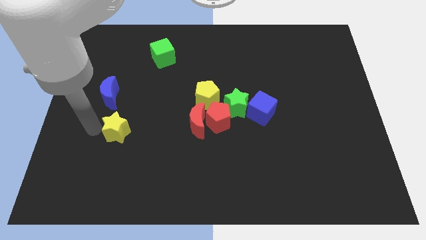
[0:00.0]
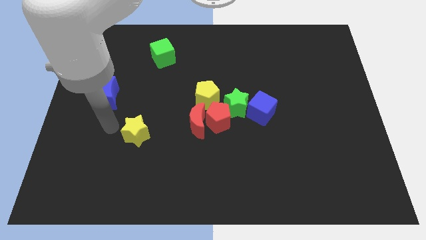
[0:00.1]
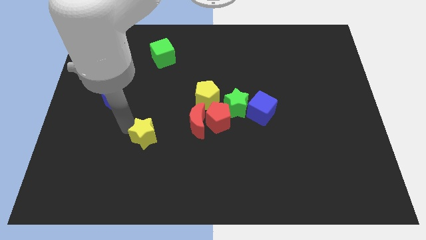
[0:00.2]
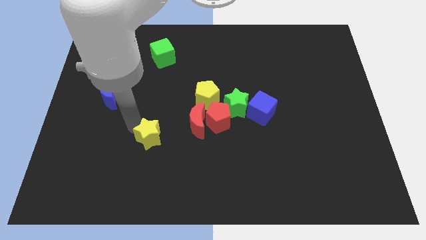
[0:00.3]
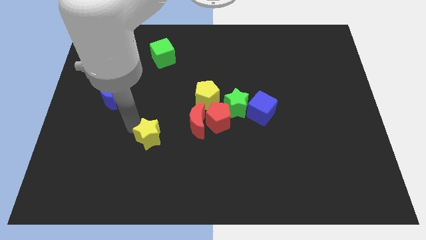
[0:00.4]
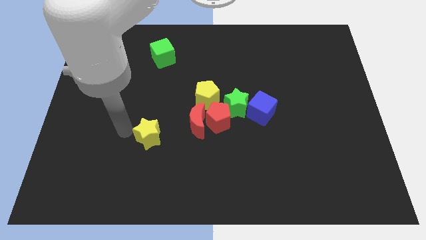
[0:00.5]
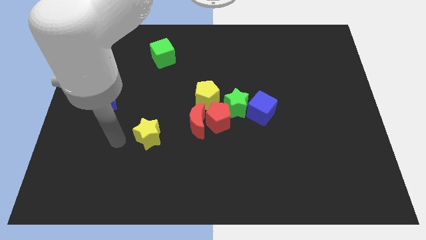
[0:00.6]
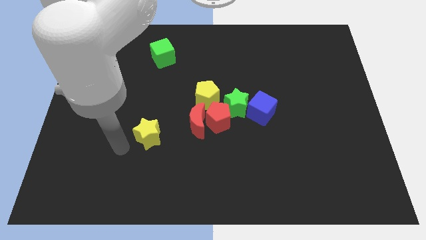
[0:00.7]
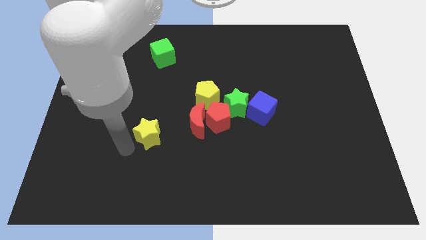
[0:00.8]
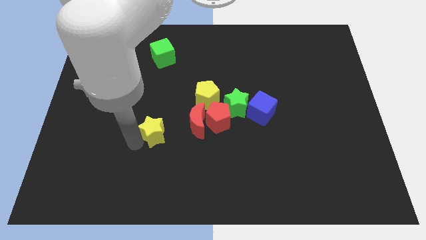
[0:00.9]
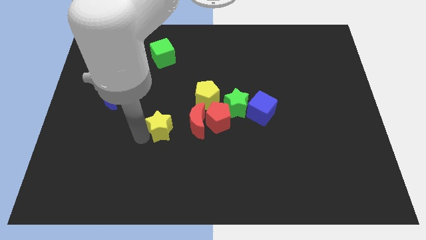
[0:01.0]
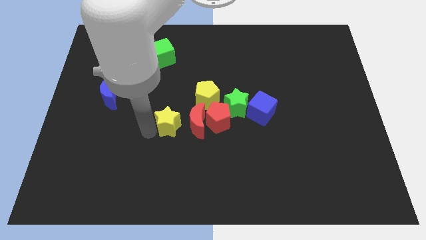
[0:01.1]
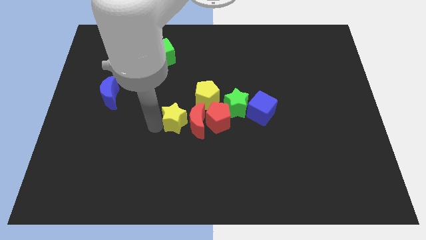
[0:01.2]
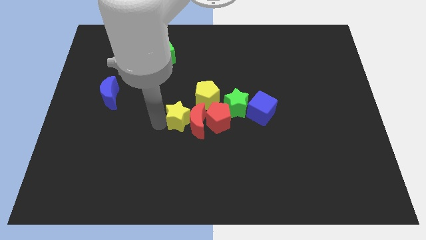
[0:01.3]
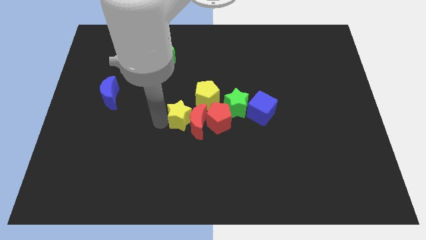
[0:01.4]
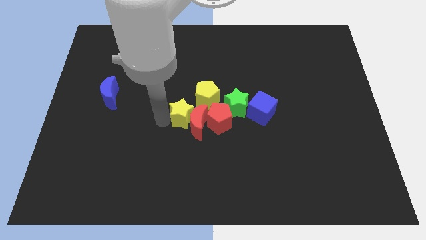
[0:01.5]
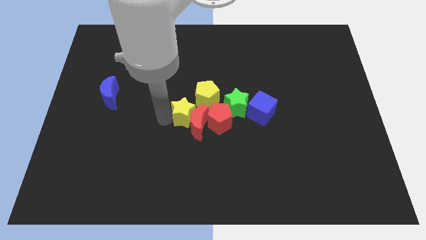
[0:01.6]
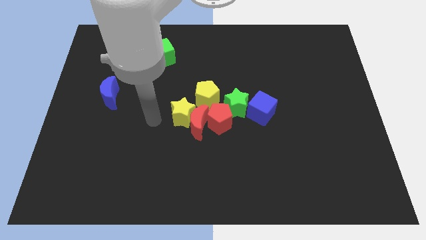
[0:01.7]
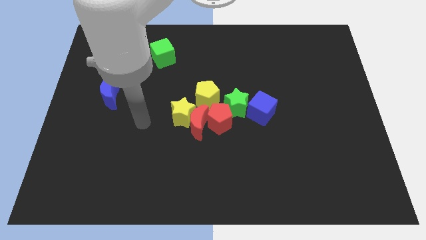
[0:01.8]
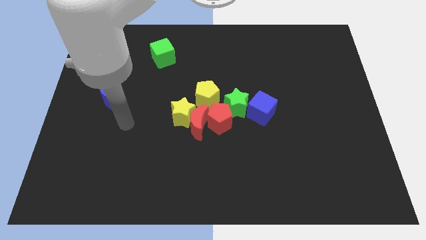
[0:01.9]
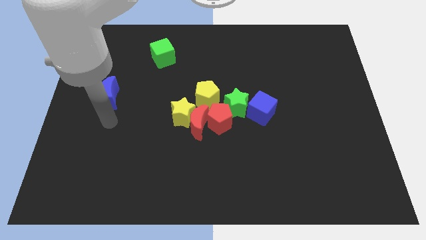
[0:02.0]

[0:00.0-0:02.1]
place the yellow star into red moon

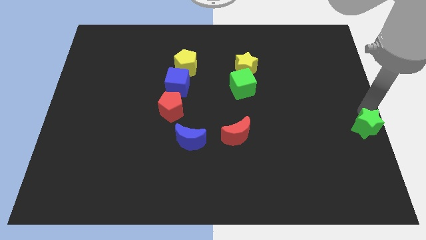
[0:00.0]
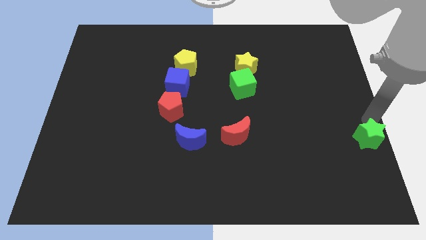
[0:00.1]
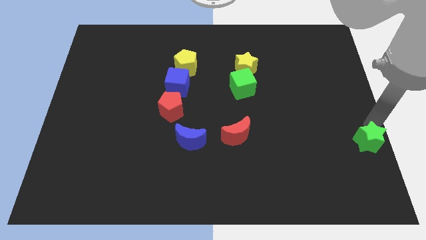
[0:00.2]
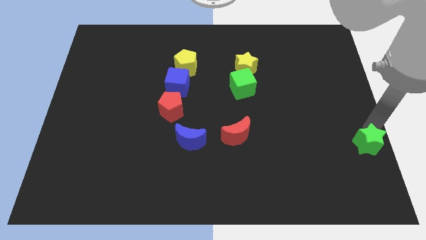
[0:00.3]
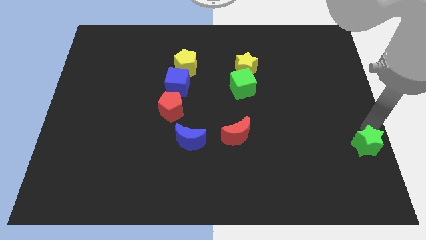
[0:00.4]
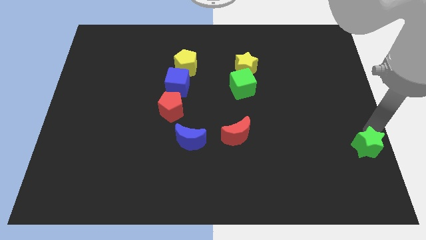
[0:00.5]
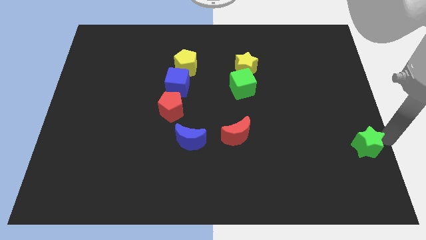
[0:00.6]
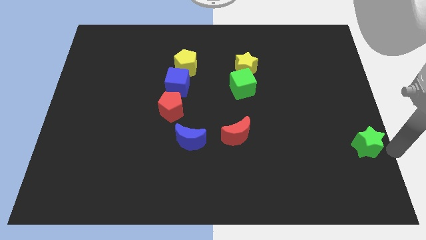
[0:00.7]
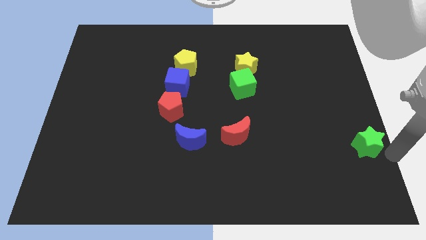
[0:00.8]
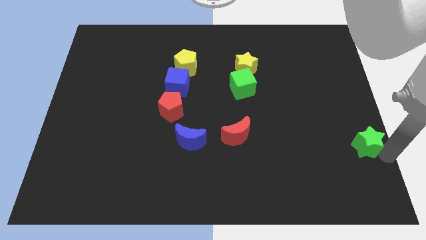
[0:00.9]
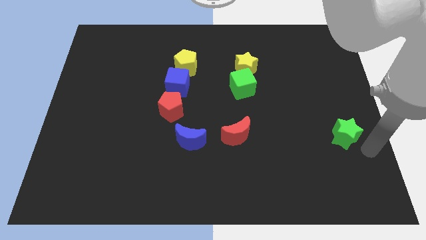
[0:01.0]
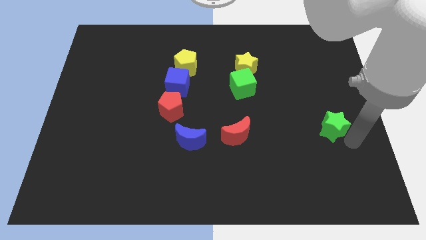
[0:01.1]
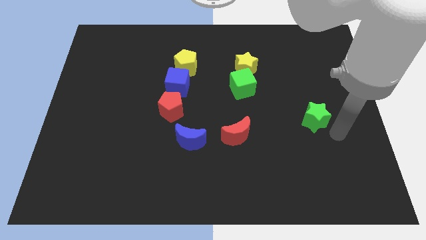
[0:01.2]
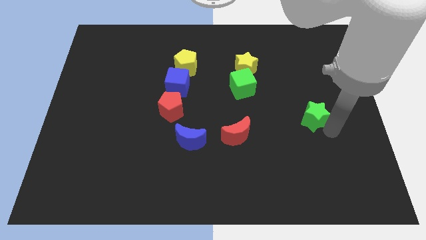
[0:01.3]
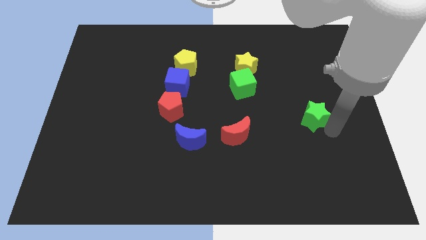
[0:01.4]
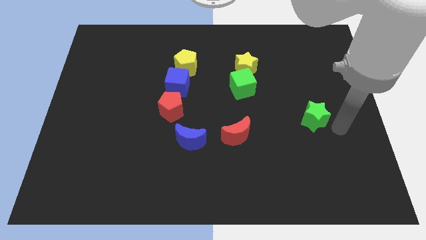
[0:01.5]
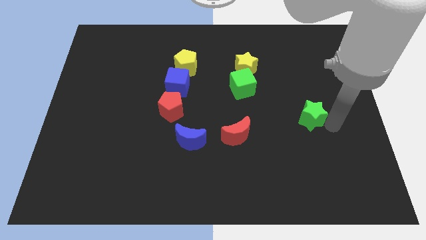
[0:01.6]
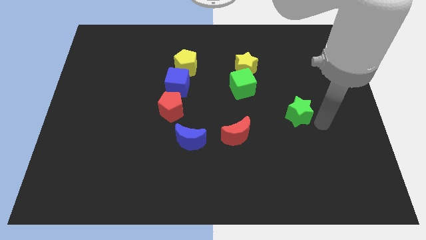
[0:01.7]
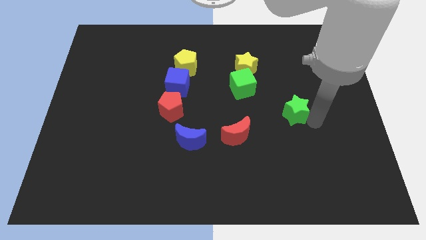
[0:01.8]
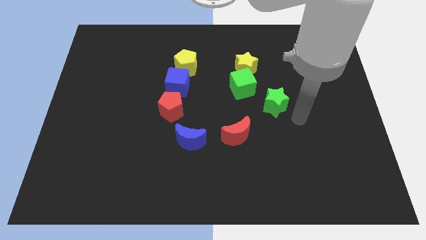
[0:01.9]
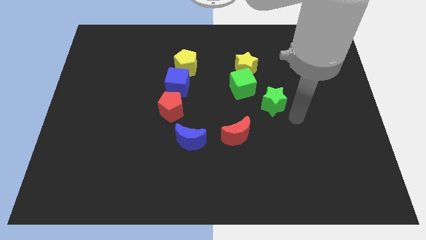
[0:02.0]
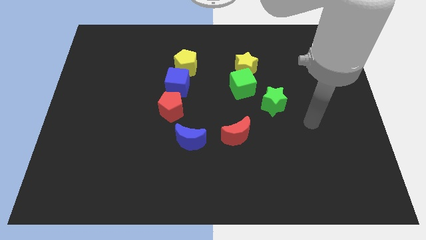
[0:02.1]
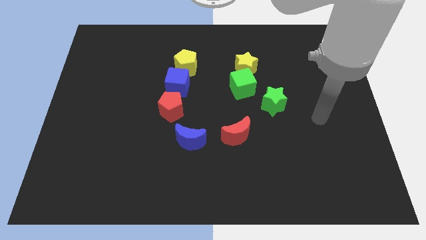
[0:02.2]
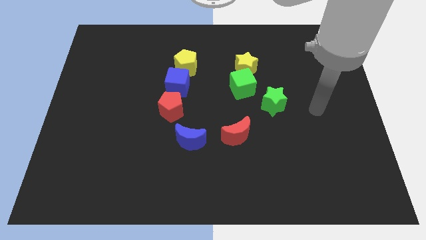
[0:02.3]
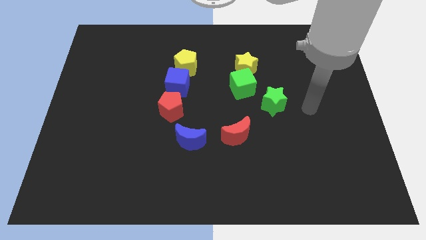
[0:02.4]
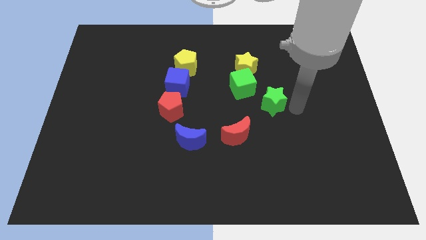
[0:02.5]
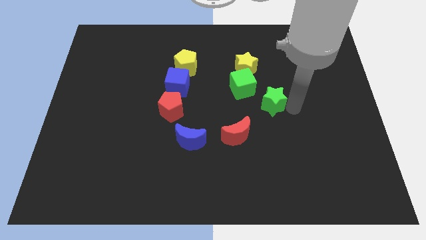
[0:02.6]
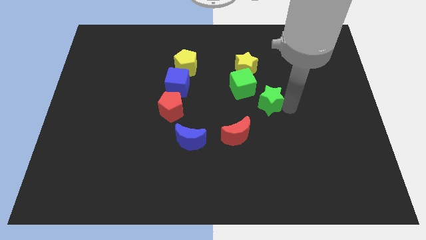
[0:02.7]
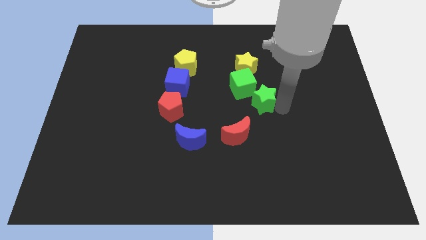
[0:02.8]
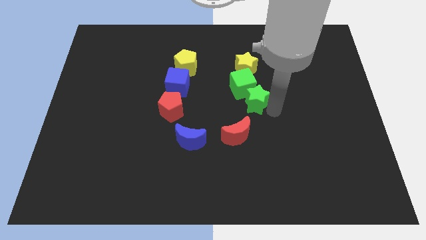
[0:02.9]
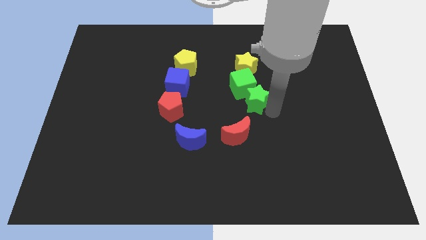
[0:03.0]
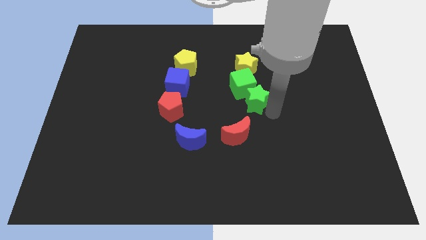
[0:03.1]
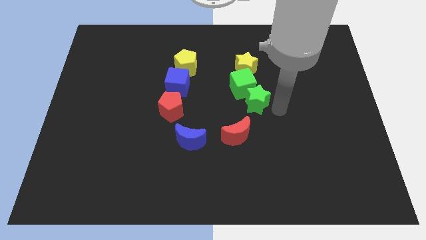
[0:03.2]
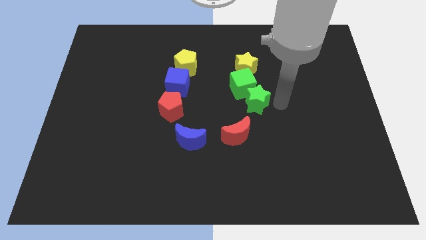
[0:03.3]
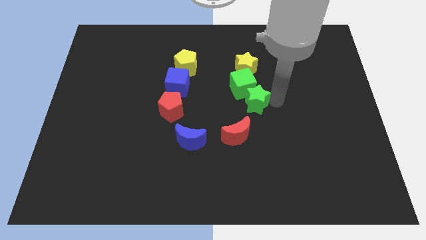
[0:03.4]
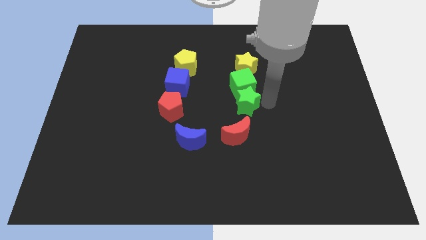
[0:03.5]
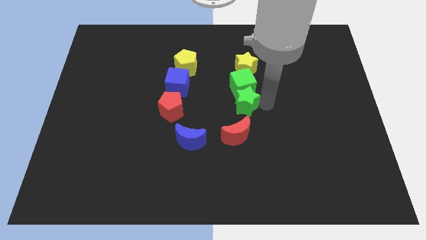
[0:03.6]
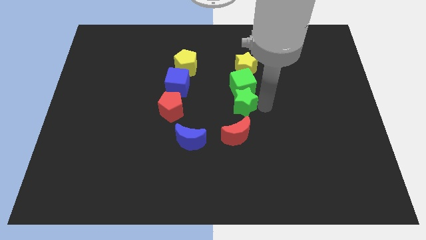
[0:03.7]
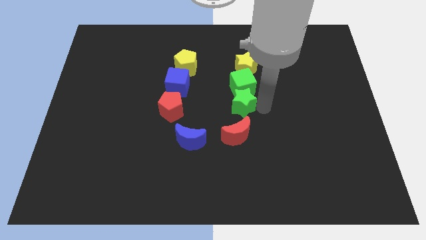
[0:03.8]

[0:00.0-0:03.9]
push the green star down to the green cube

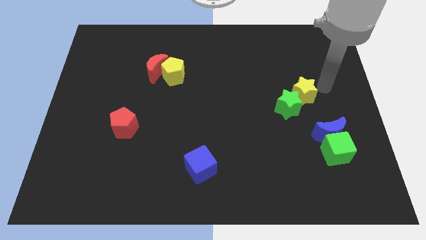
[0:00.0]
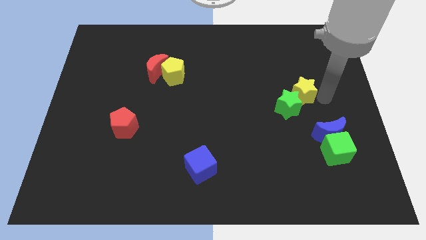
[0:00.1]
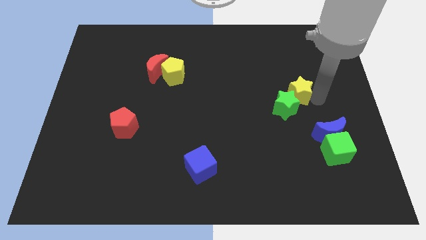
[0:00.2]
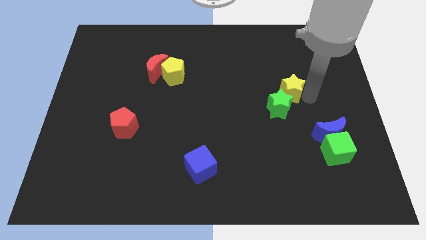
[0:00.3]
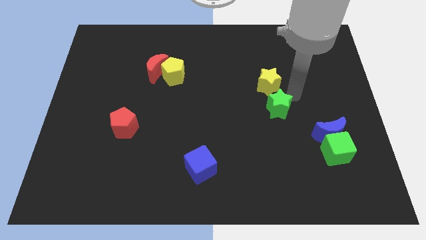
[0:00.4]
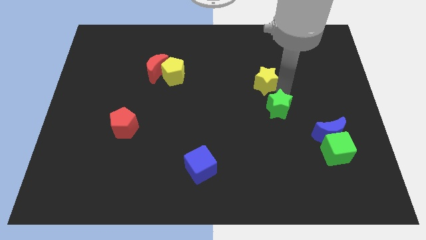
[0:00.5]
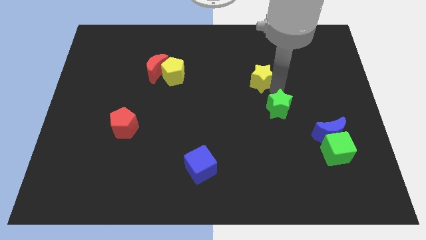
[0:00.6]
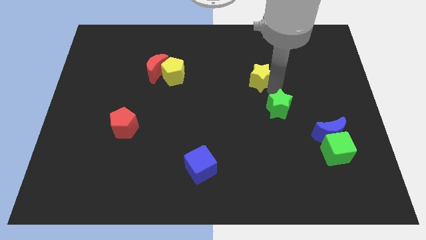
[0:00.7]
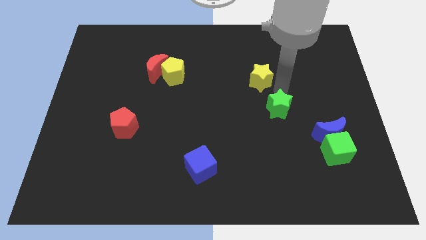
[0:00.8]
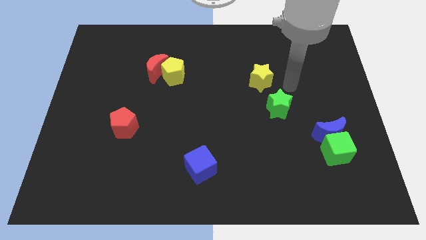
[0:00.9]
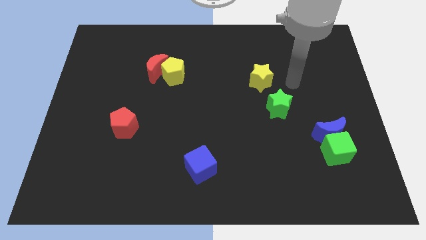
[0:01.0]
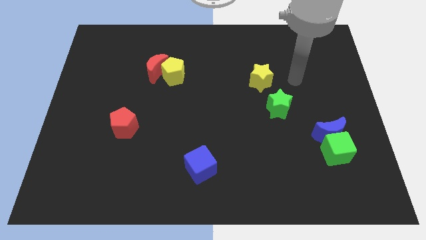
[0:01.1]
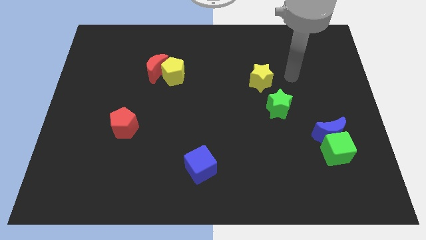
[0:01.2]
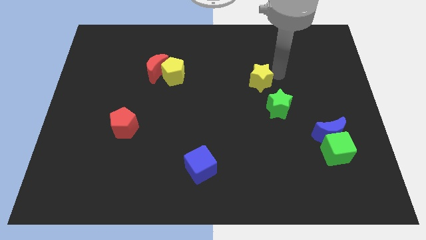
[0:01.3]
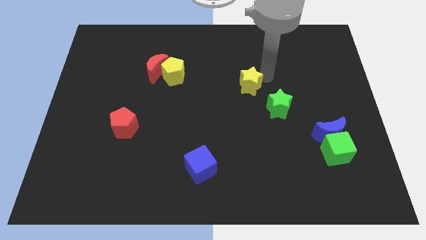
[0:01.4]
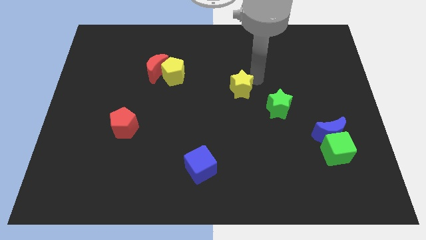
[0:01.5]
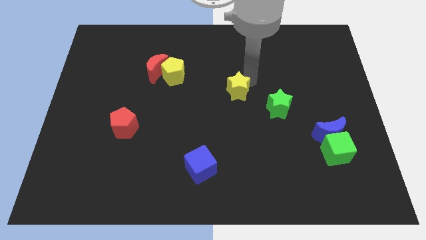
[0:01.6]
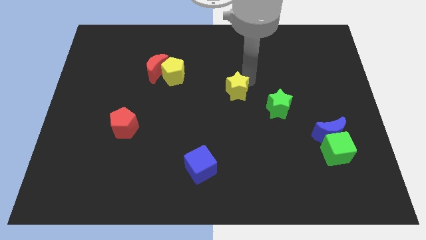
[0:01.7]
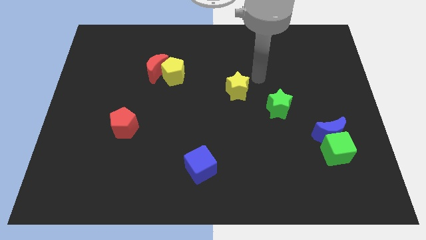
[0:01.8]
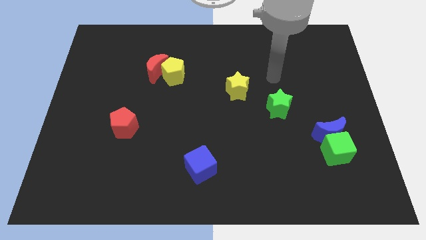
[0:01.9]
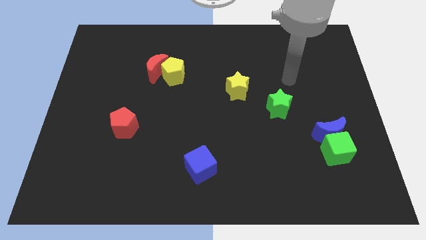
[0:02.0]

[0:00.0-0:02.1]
place the yellow star in between yellow pentagon and green star

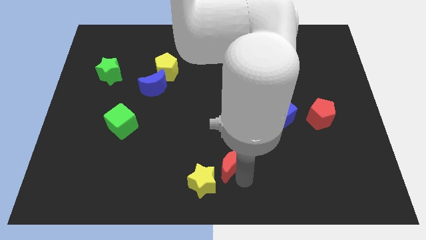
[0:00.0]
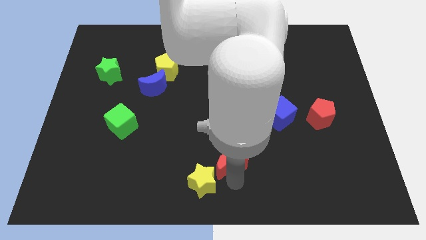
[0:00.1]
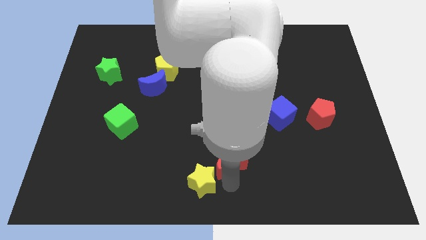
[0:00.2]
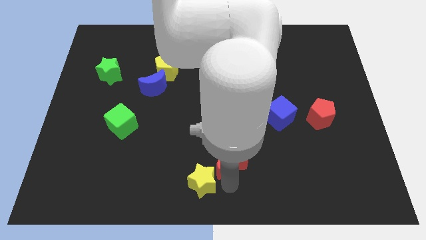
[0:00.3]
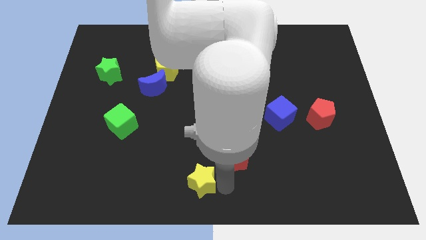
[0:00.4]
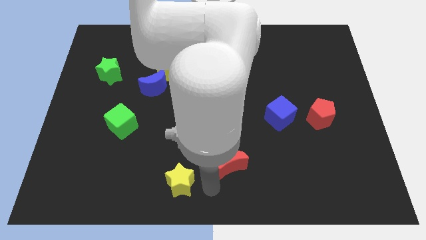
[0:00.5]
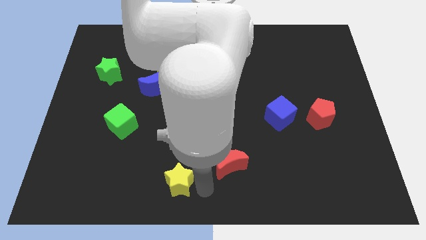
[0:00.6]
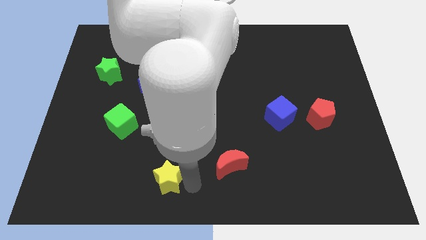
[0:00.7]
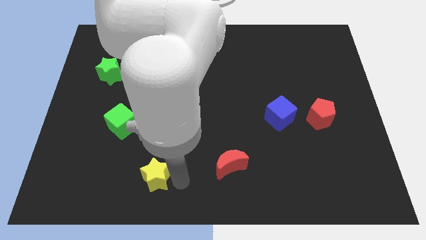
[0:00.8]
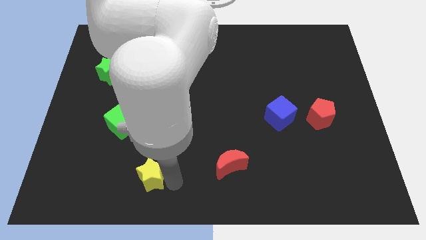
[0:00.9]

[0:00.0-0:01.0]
move yellow star slightly left
